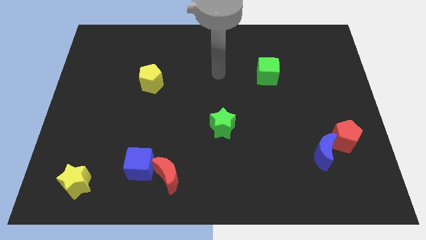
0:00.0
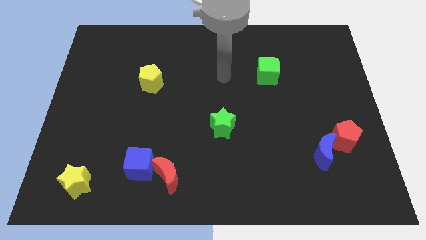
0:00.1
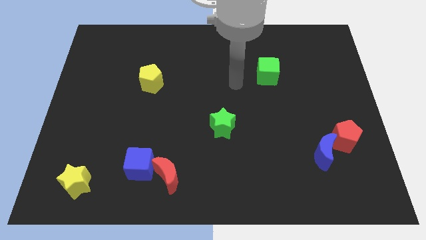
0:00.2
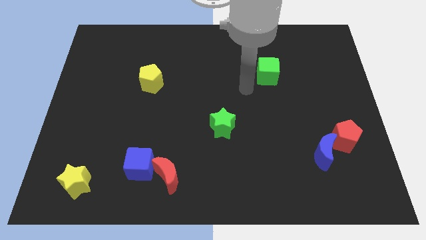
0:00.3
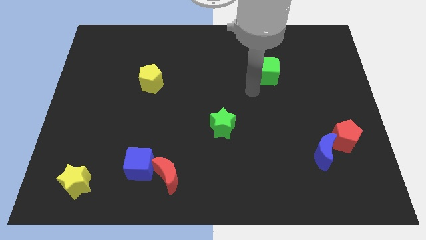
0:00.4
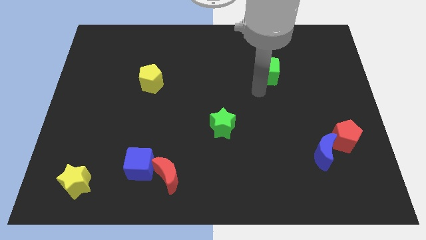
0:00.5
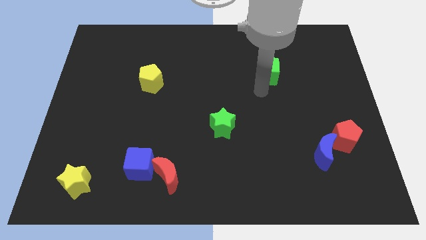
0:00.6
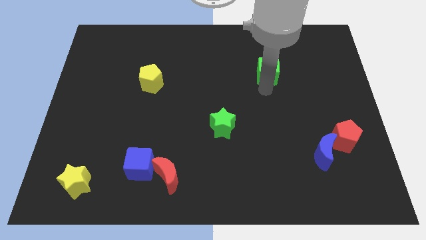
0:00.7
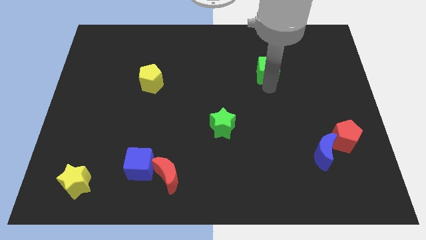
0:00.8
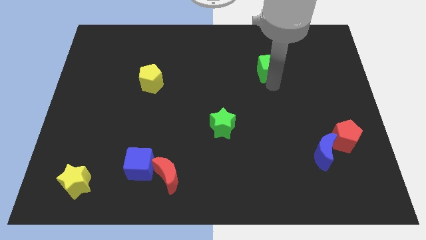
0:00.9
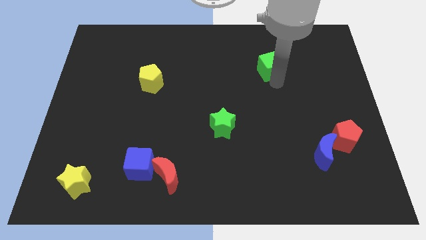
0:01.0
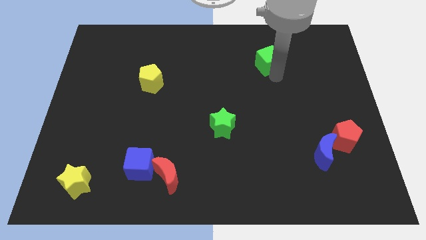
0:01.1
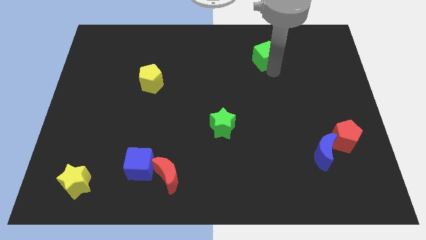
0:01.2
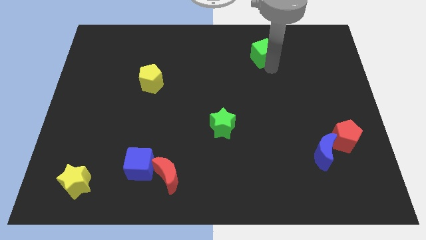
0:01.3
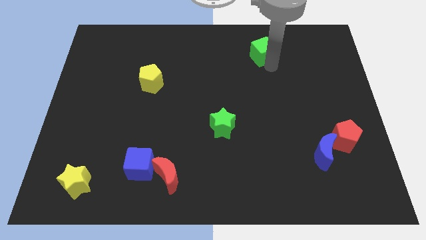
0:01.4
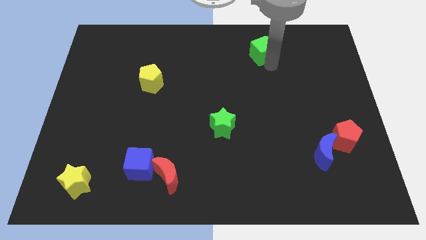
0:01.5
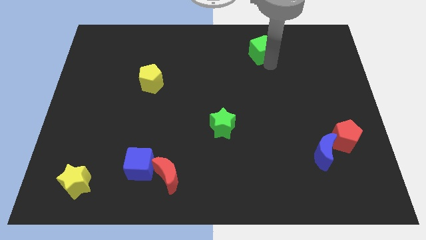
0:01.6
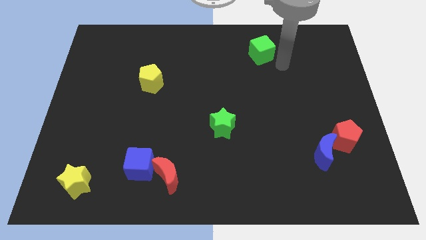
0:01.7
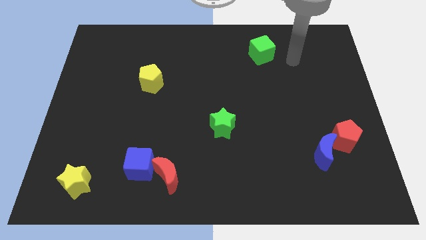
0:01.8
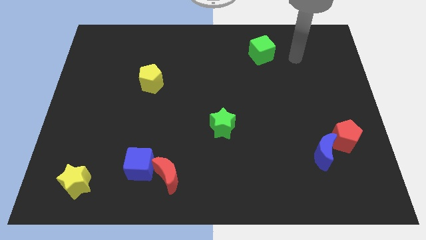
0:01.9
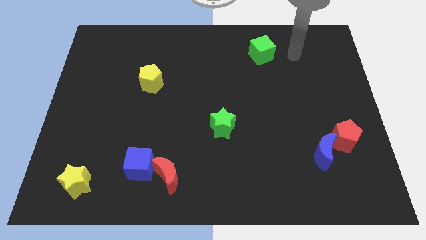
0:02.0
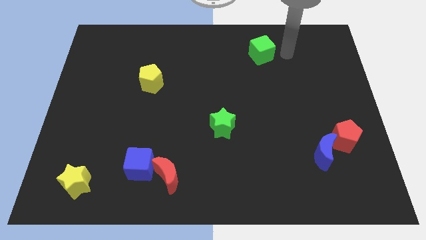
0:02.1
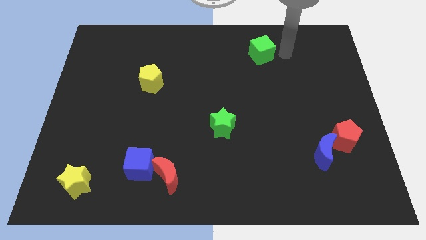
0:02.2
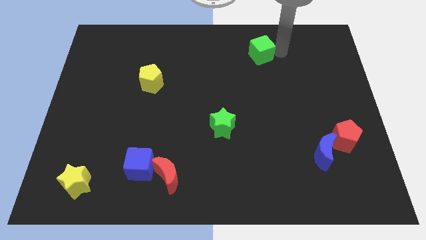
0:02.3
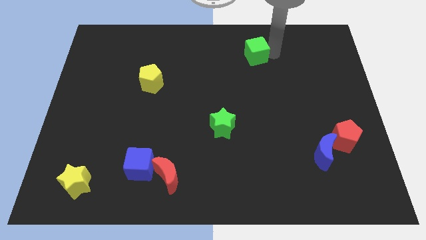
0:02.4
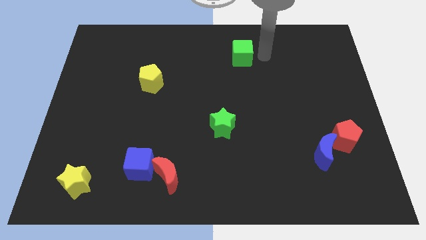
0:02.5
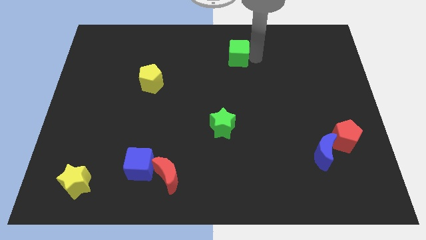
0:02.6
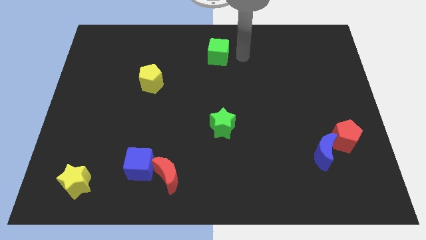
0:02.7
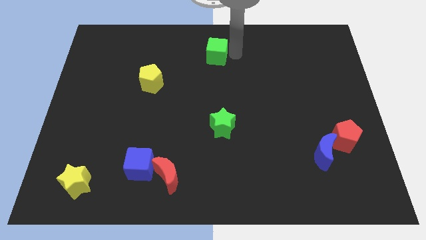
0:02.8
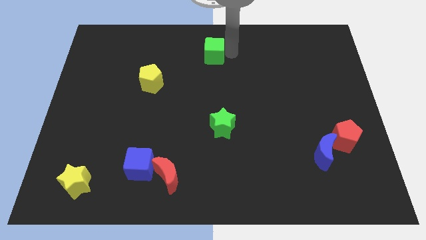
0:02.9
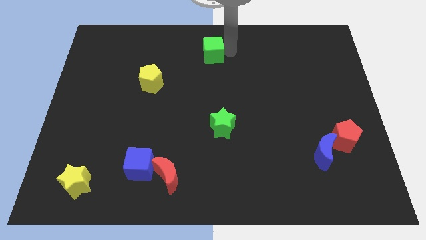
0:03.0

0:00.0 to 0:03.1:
place green cube diagonal to yellow pentagon

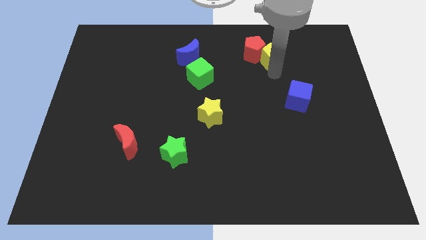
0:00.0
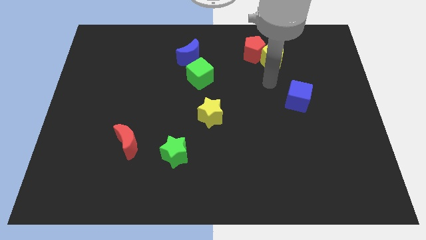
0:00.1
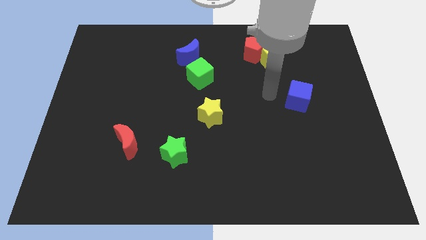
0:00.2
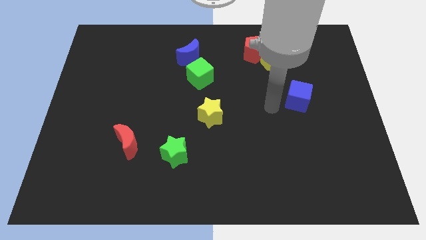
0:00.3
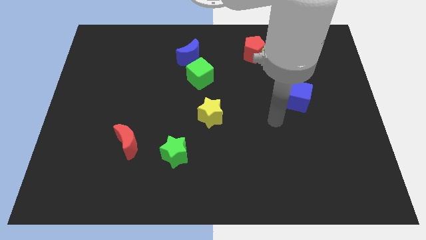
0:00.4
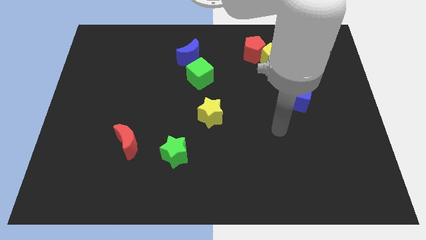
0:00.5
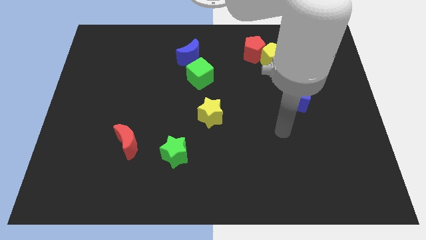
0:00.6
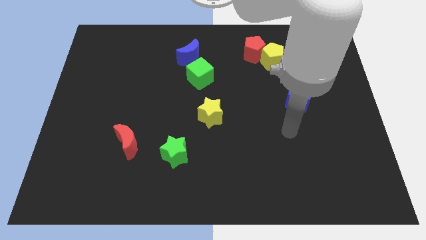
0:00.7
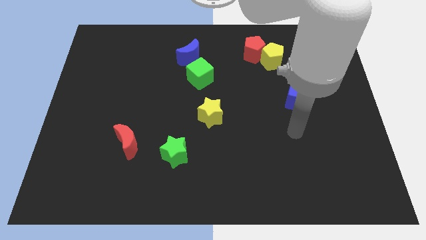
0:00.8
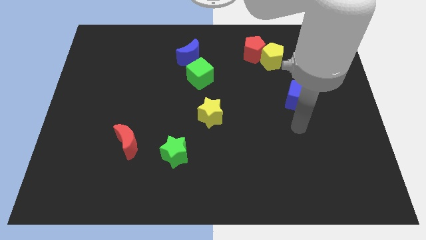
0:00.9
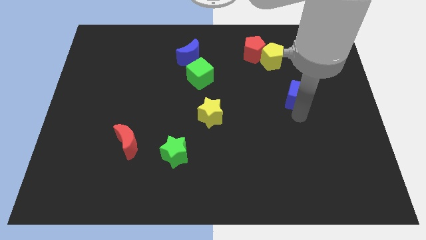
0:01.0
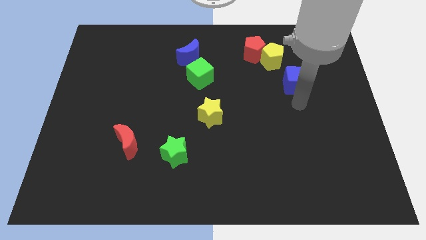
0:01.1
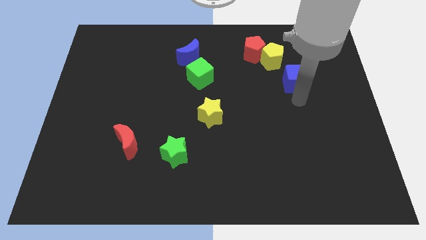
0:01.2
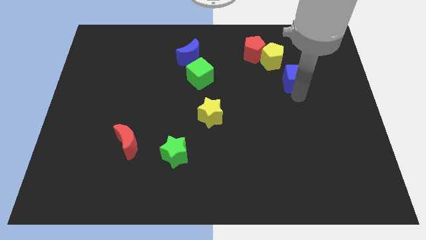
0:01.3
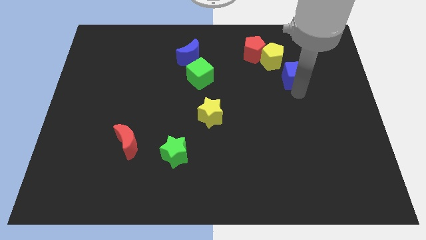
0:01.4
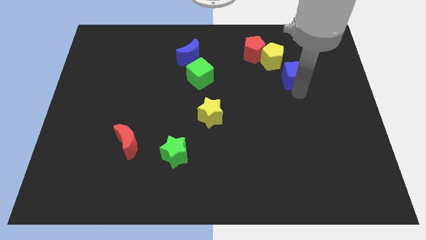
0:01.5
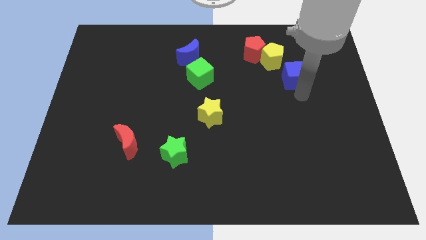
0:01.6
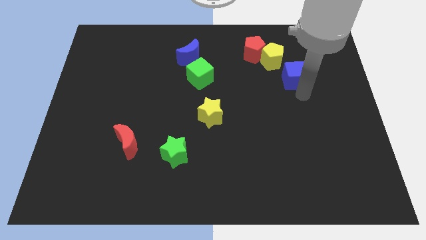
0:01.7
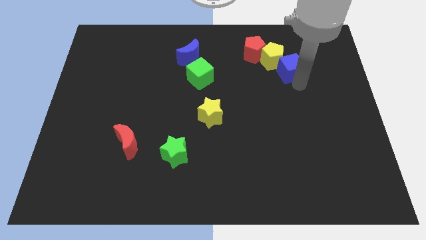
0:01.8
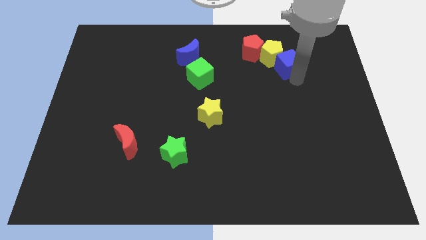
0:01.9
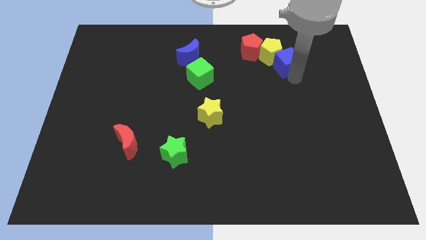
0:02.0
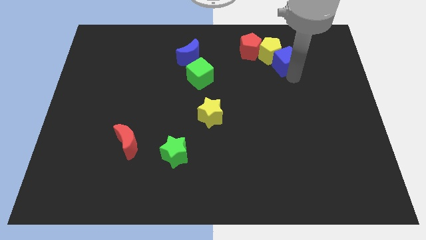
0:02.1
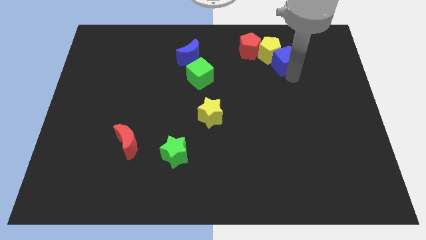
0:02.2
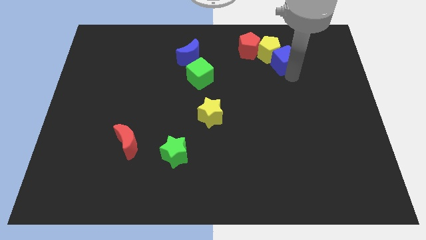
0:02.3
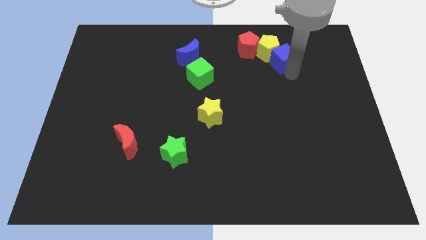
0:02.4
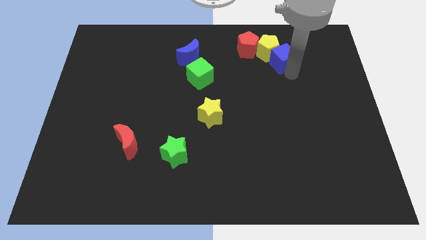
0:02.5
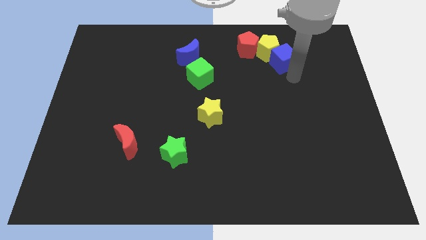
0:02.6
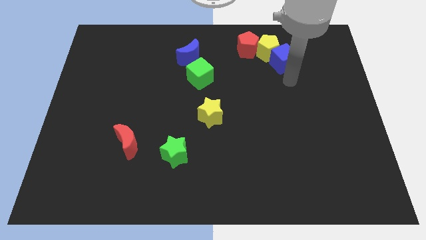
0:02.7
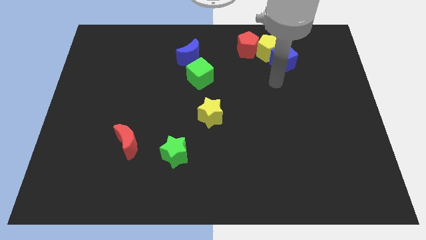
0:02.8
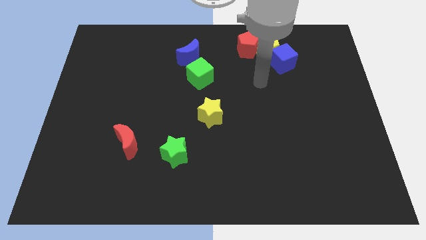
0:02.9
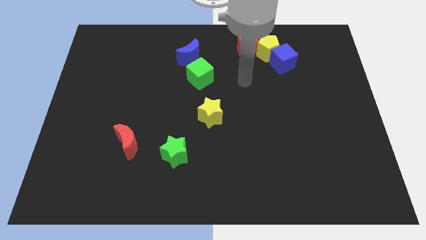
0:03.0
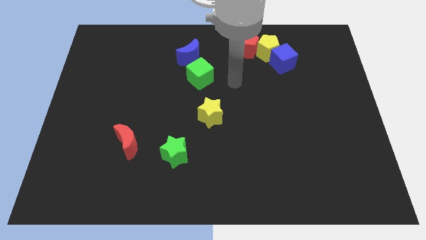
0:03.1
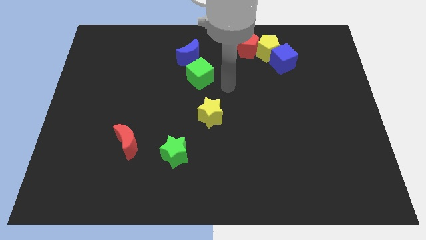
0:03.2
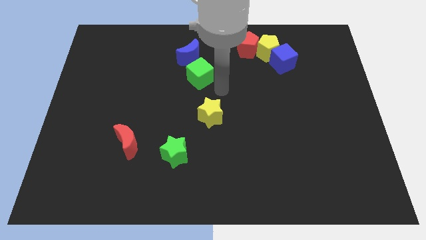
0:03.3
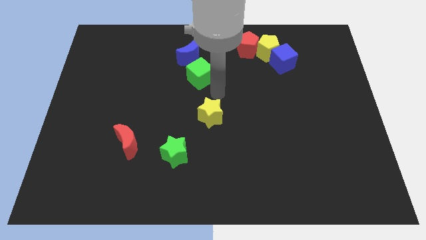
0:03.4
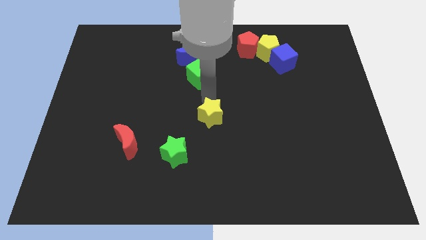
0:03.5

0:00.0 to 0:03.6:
move the blue cube into the yellow pentagon

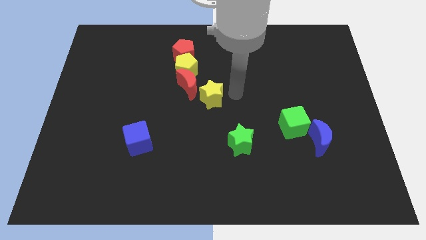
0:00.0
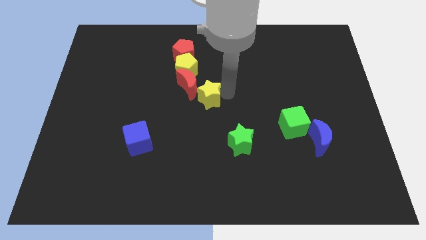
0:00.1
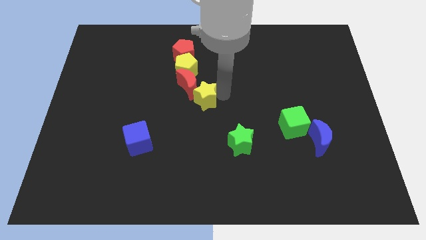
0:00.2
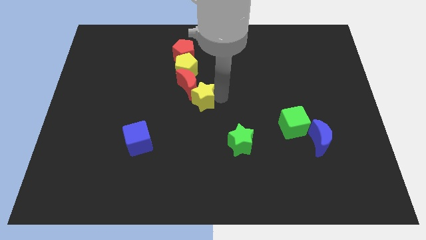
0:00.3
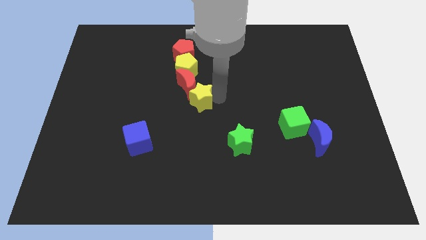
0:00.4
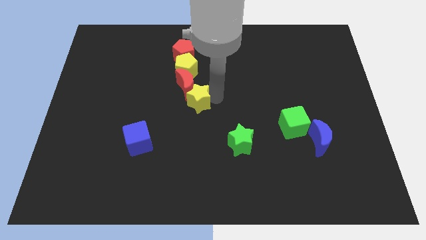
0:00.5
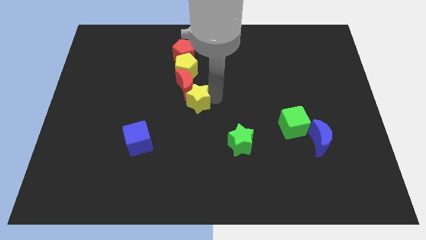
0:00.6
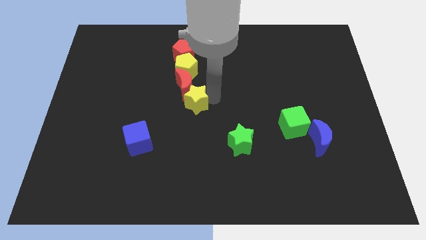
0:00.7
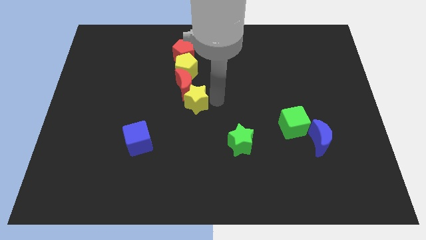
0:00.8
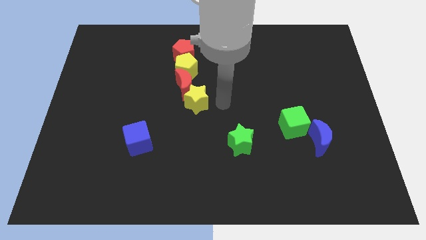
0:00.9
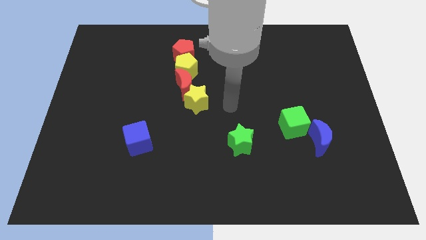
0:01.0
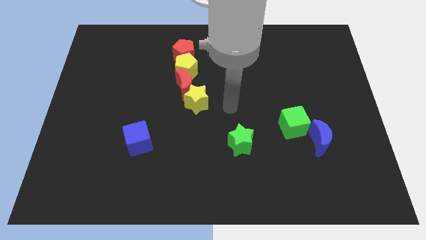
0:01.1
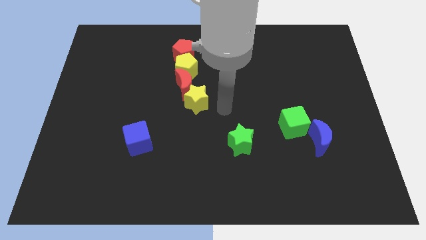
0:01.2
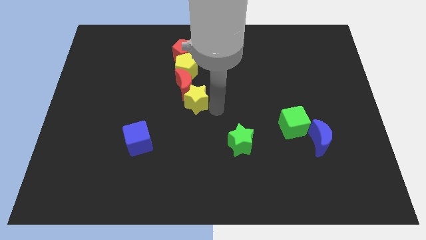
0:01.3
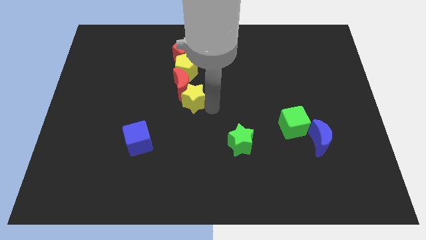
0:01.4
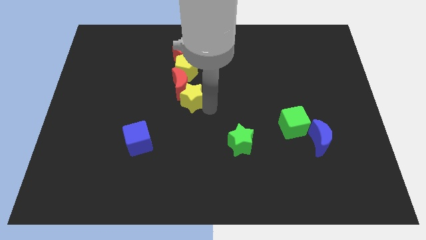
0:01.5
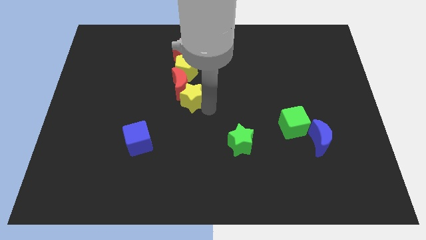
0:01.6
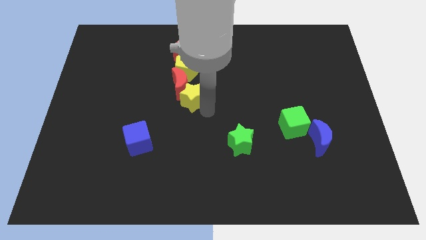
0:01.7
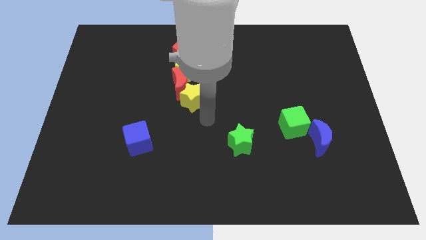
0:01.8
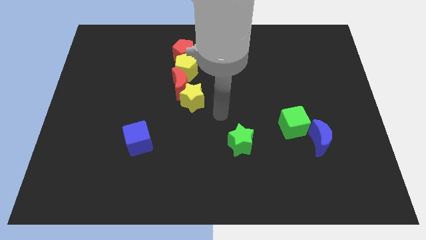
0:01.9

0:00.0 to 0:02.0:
place yellow star below red crescent

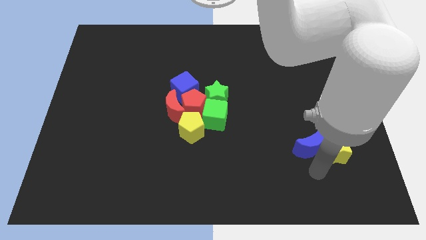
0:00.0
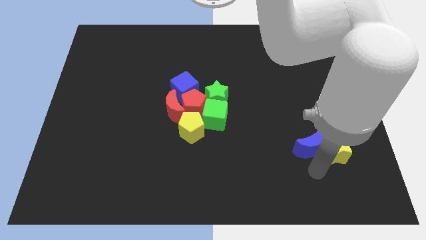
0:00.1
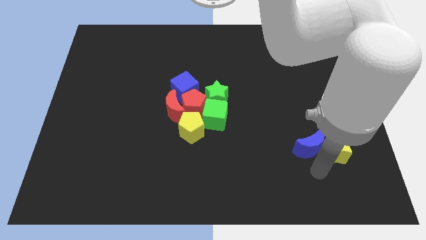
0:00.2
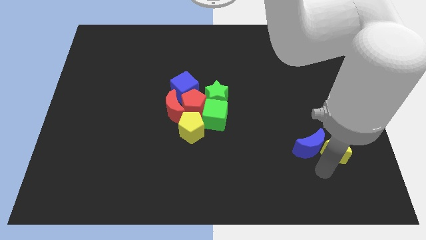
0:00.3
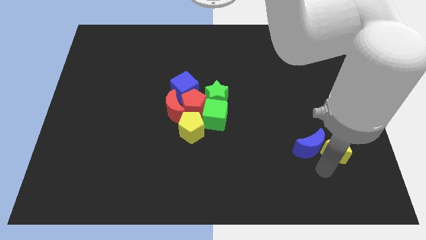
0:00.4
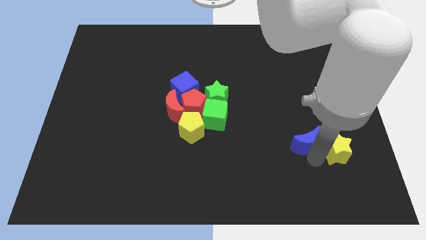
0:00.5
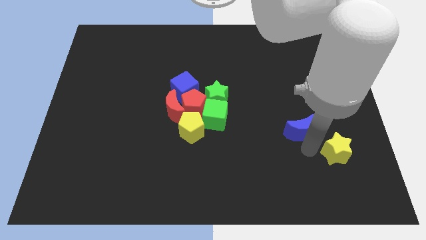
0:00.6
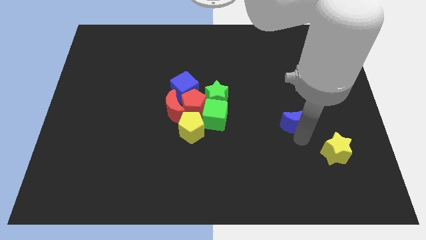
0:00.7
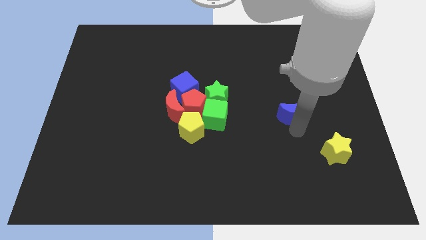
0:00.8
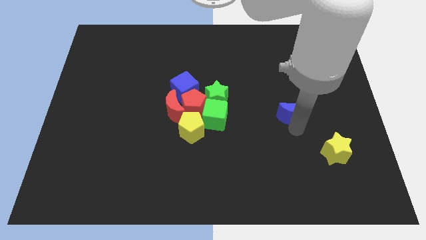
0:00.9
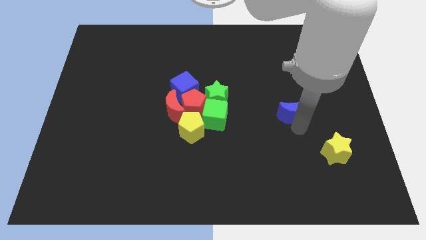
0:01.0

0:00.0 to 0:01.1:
seperate the blue crescent from the yellow star
